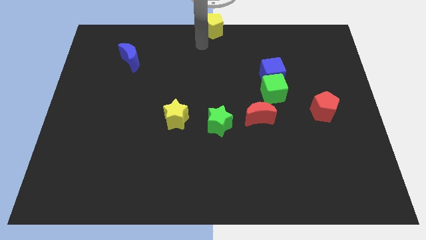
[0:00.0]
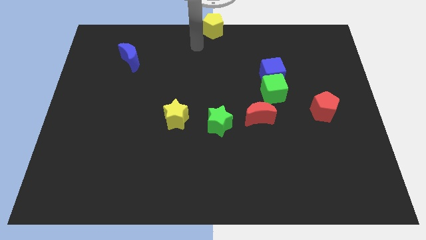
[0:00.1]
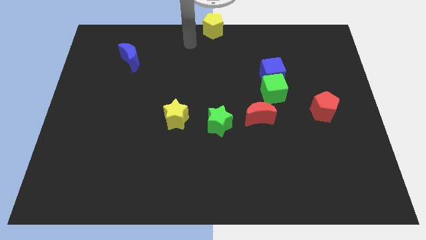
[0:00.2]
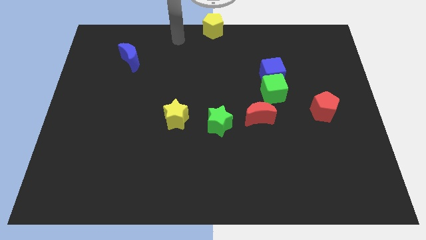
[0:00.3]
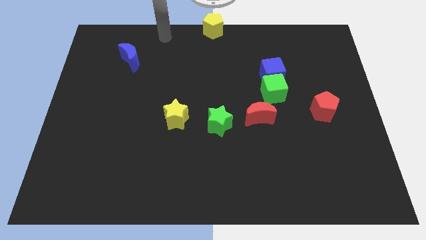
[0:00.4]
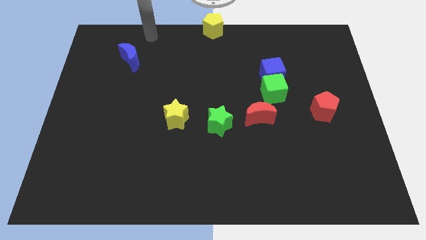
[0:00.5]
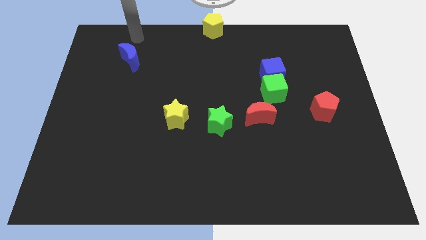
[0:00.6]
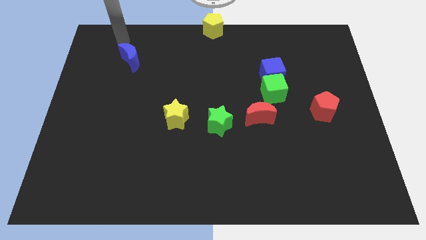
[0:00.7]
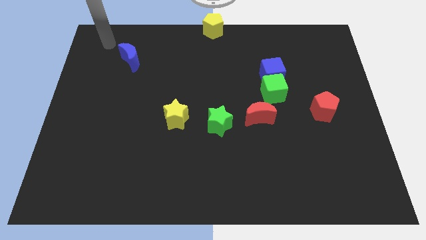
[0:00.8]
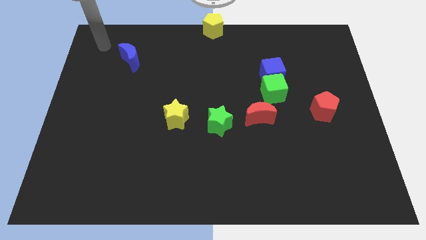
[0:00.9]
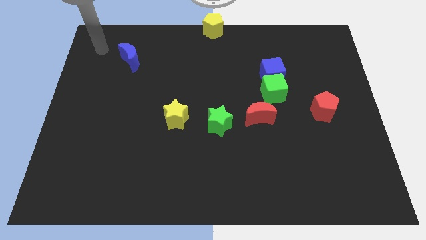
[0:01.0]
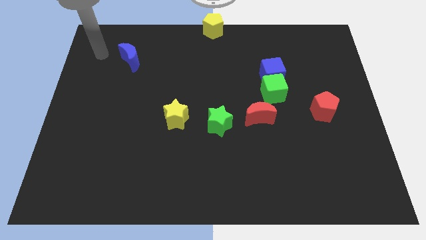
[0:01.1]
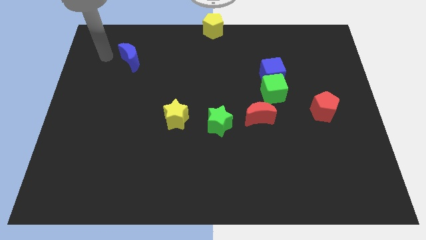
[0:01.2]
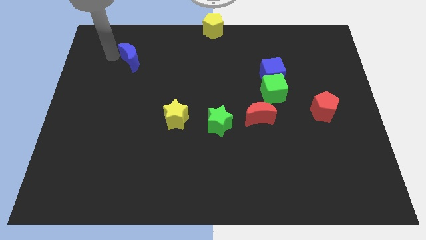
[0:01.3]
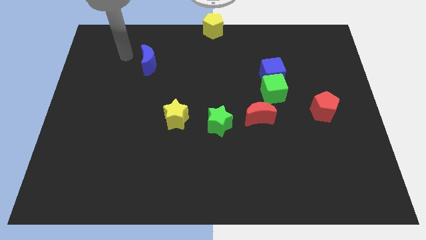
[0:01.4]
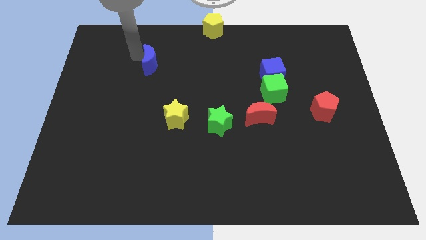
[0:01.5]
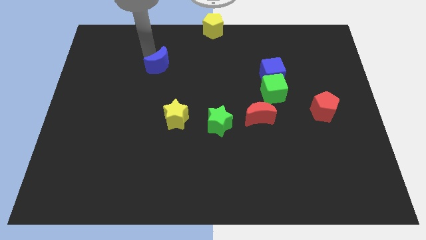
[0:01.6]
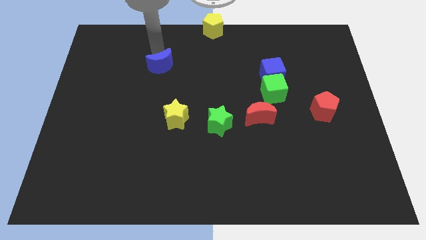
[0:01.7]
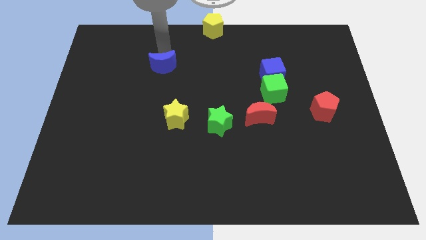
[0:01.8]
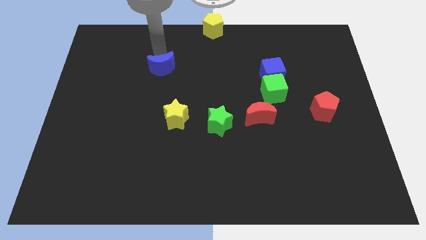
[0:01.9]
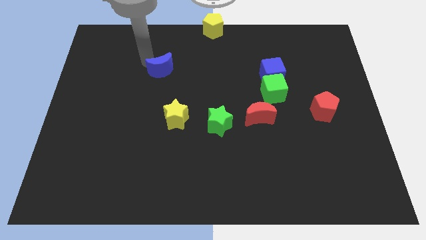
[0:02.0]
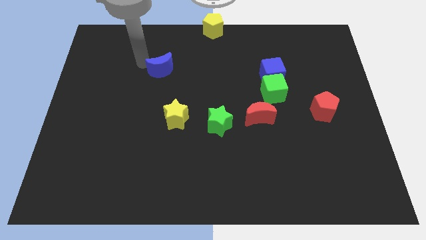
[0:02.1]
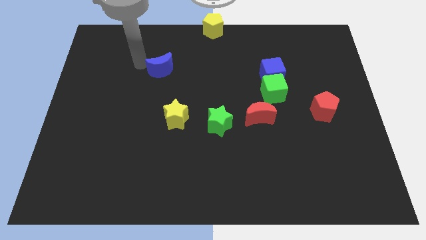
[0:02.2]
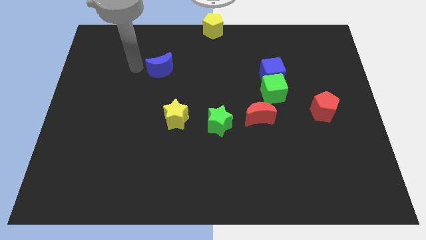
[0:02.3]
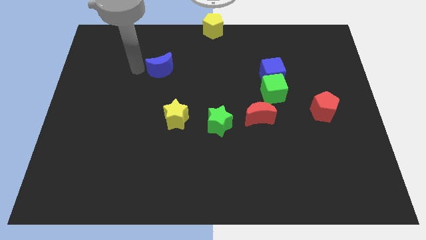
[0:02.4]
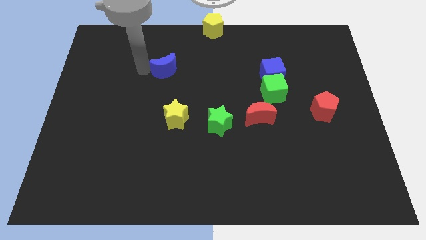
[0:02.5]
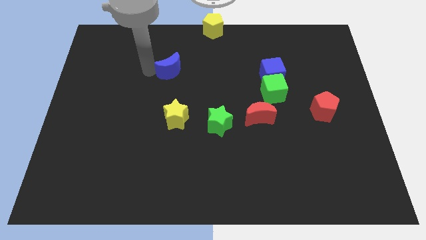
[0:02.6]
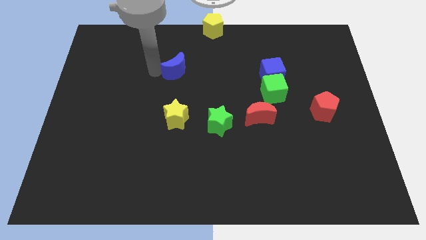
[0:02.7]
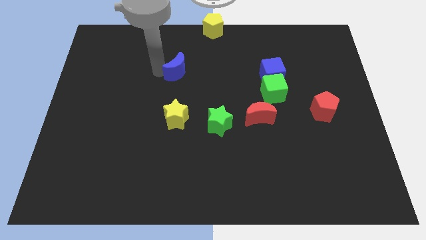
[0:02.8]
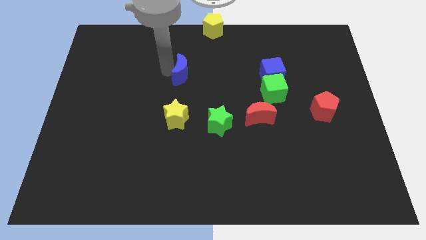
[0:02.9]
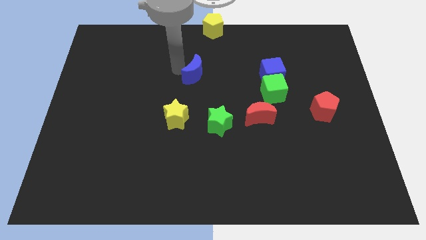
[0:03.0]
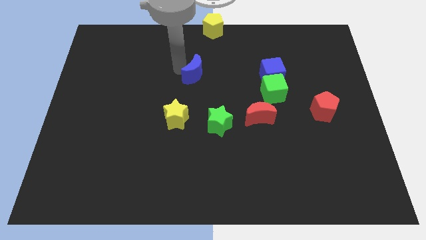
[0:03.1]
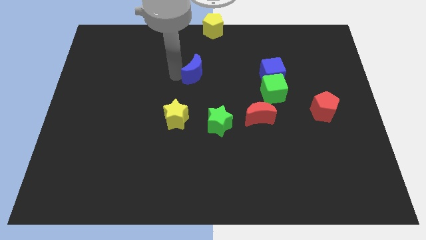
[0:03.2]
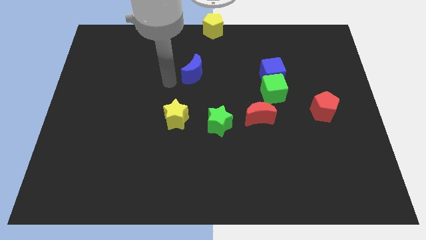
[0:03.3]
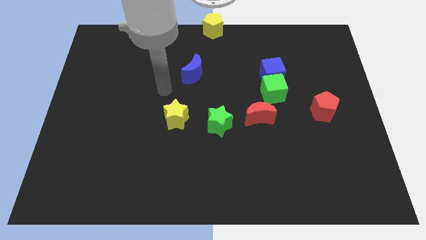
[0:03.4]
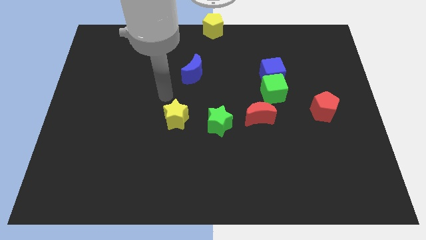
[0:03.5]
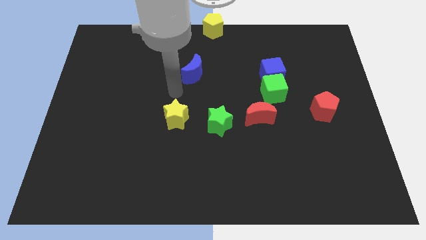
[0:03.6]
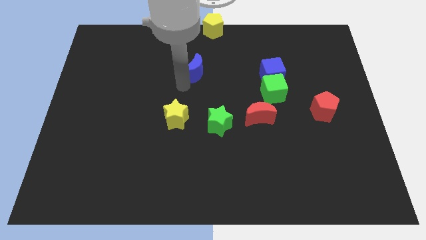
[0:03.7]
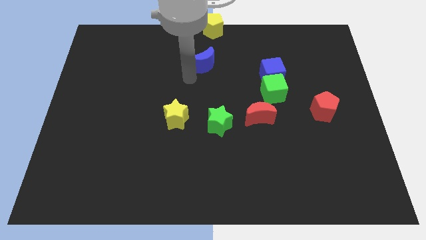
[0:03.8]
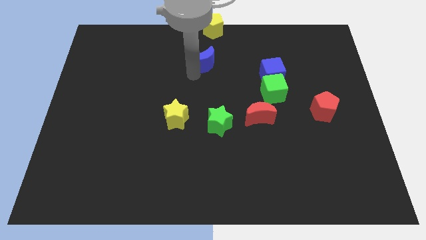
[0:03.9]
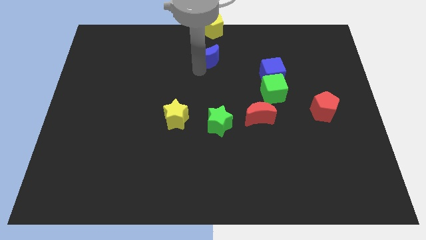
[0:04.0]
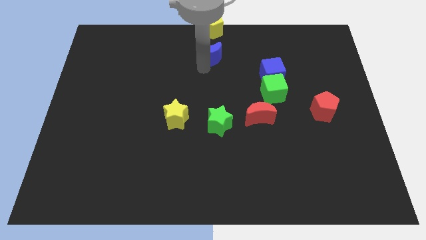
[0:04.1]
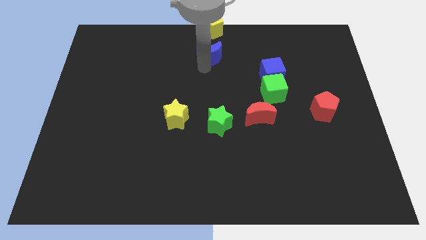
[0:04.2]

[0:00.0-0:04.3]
place the blue crescent to the bottom of yellow pentagon

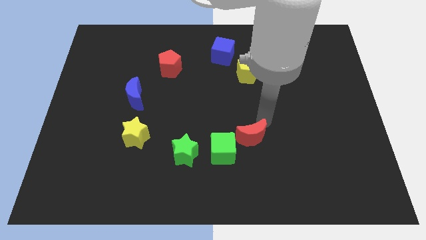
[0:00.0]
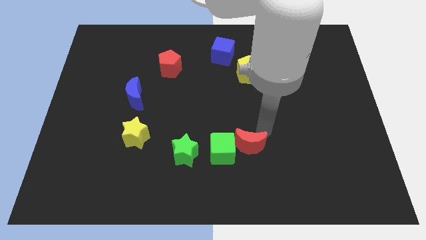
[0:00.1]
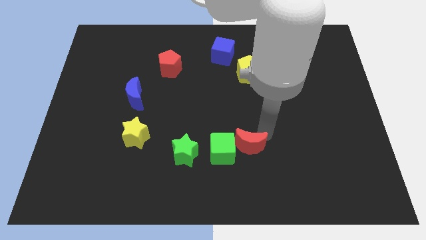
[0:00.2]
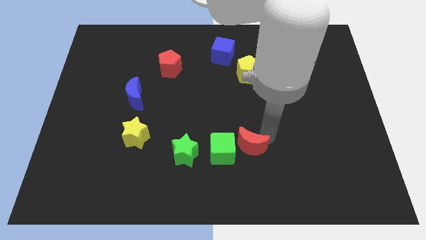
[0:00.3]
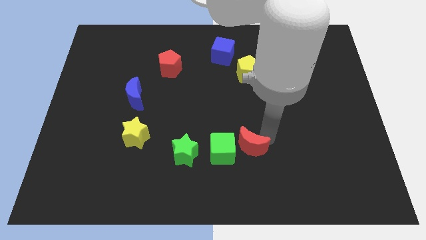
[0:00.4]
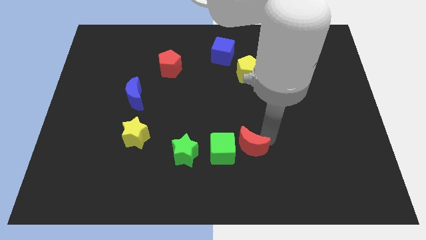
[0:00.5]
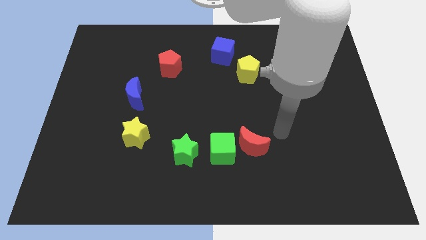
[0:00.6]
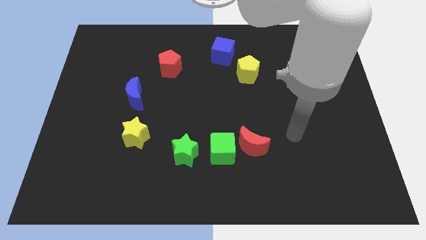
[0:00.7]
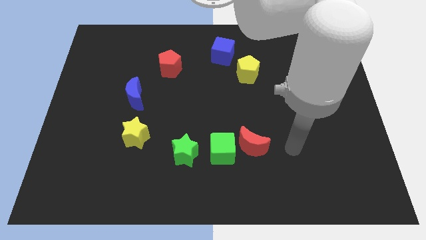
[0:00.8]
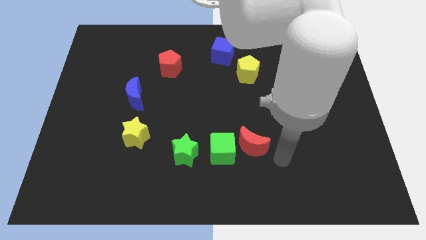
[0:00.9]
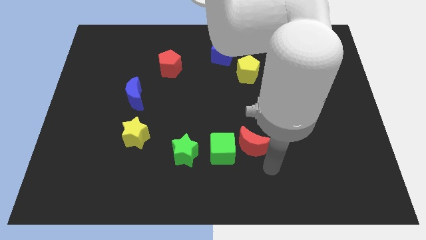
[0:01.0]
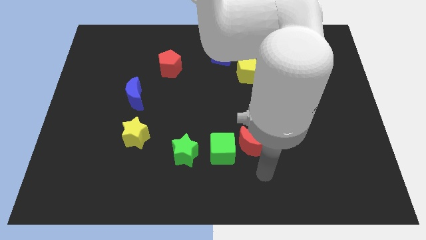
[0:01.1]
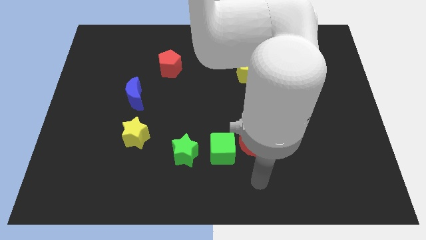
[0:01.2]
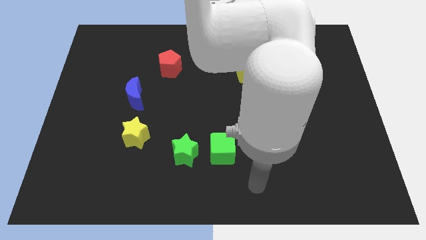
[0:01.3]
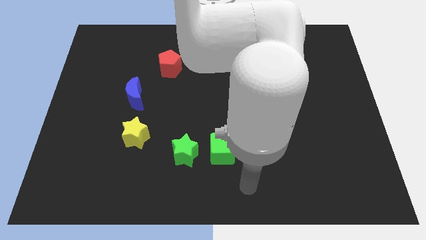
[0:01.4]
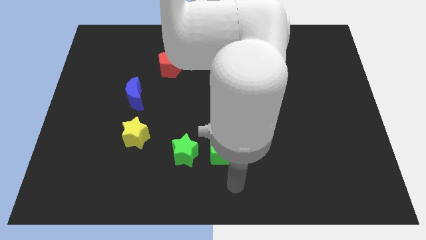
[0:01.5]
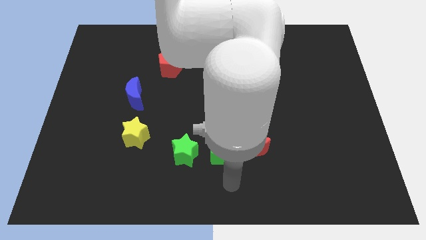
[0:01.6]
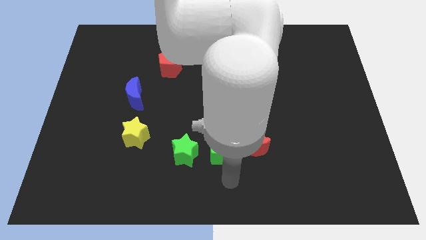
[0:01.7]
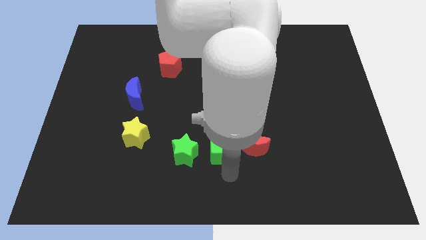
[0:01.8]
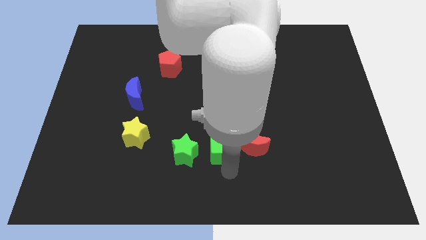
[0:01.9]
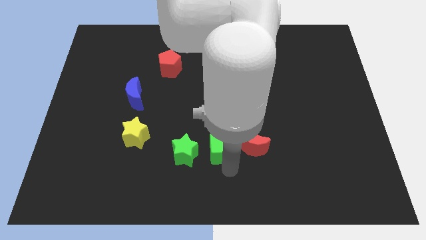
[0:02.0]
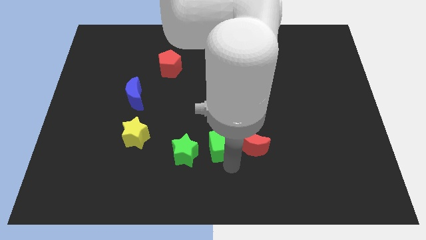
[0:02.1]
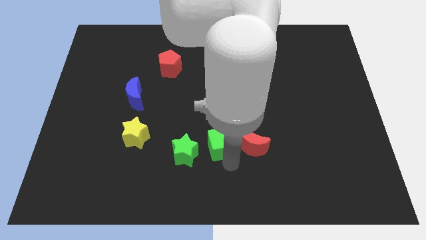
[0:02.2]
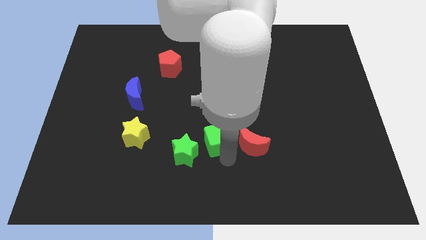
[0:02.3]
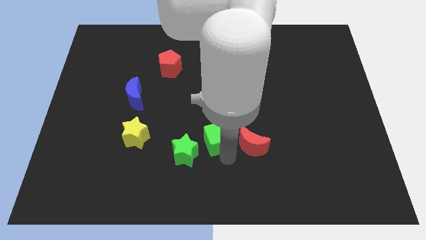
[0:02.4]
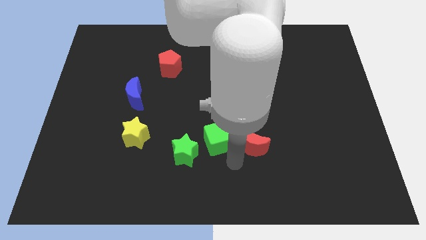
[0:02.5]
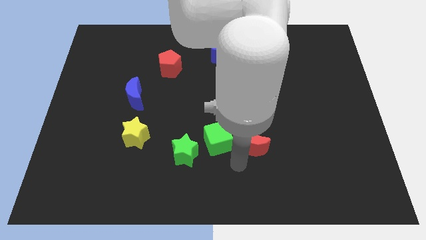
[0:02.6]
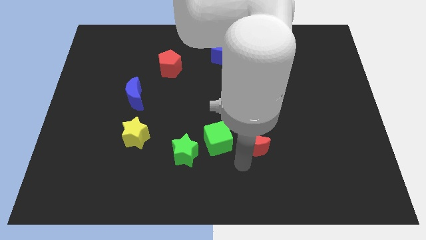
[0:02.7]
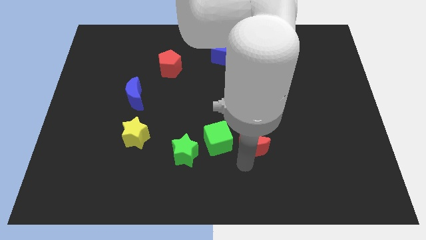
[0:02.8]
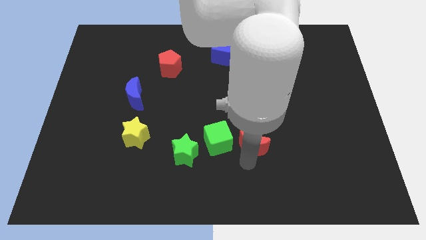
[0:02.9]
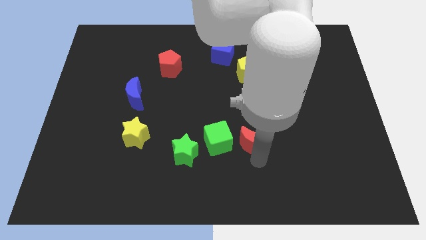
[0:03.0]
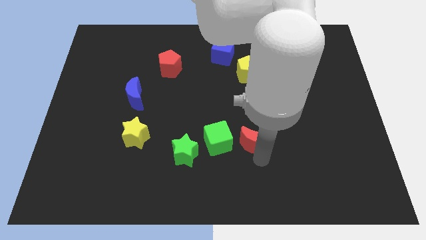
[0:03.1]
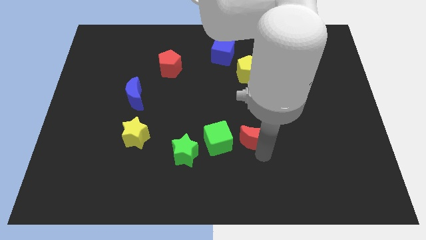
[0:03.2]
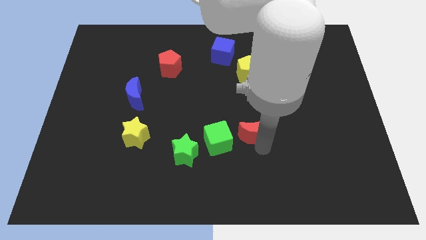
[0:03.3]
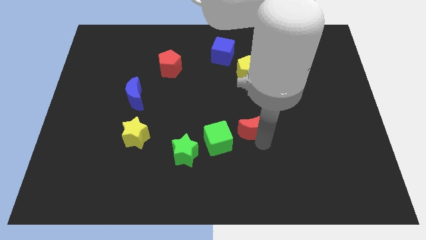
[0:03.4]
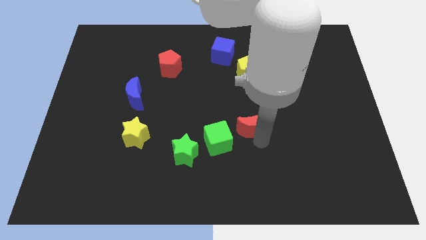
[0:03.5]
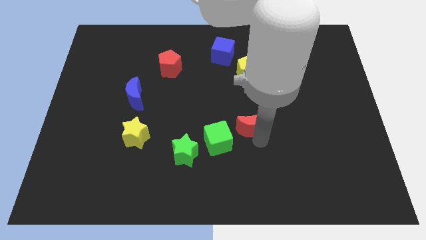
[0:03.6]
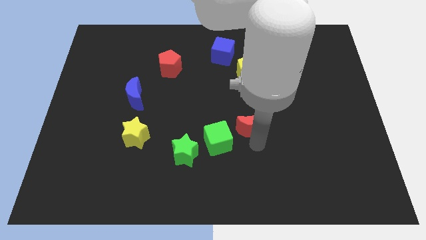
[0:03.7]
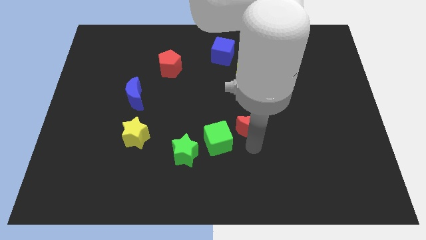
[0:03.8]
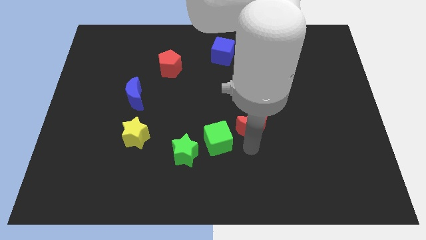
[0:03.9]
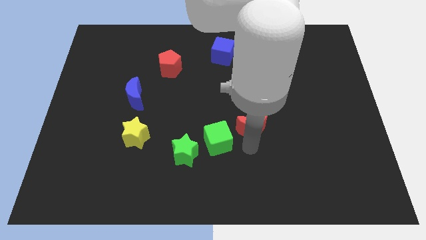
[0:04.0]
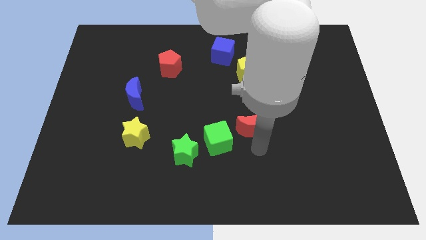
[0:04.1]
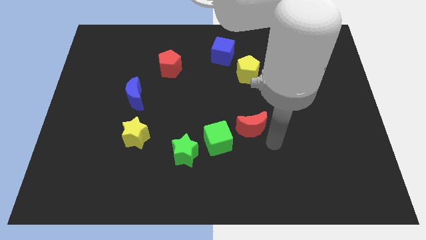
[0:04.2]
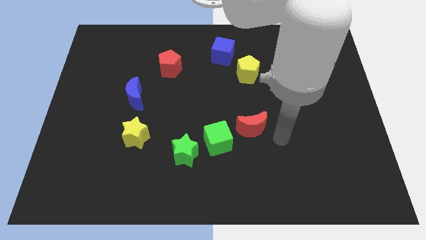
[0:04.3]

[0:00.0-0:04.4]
adjust green cube and red moon towards top side

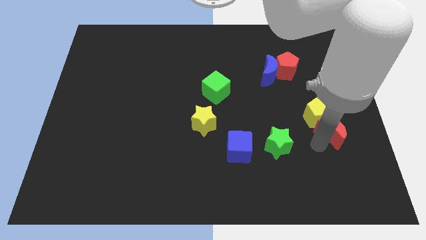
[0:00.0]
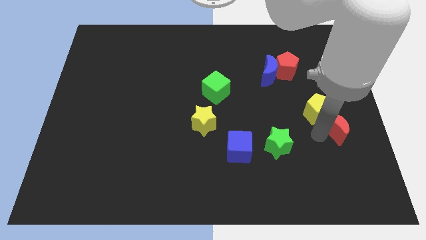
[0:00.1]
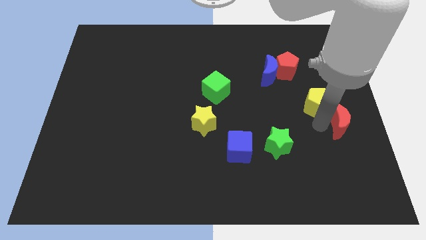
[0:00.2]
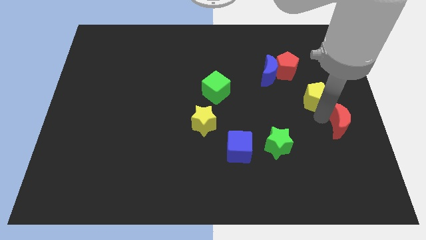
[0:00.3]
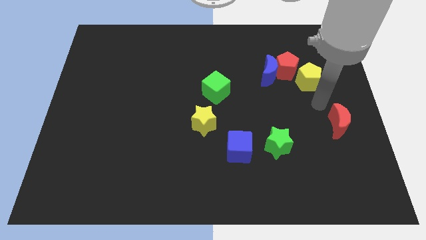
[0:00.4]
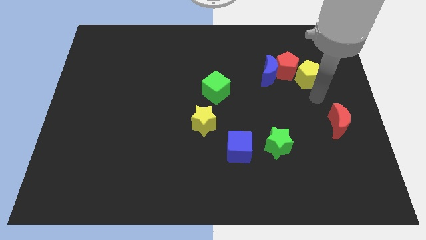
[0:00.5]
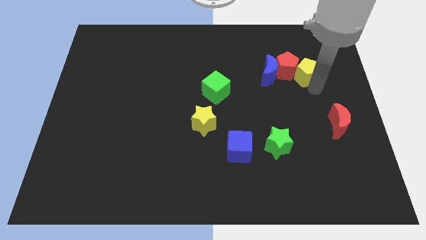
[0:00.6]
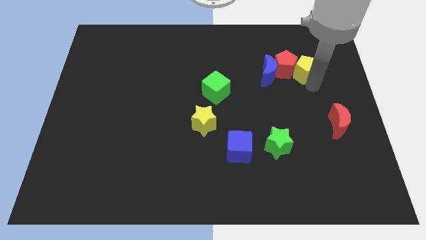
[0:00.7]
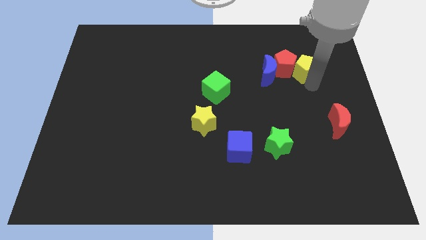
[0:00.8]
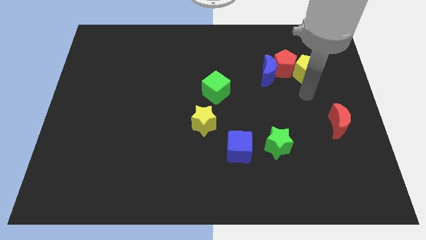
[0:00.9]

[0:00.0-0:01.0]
push the yellow pentagon into the red pentagon
